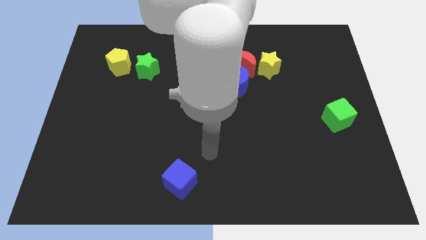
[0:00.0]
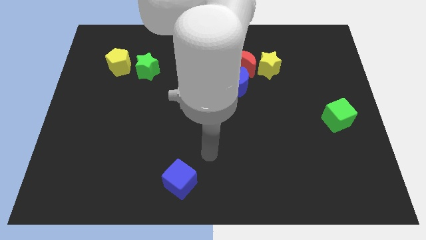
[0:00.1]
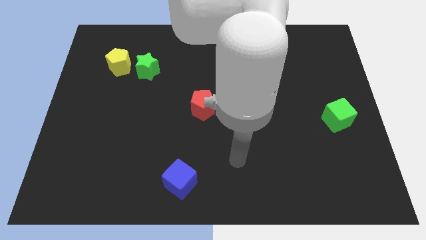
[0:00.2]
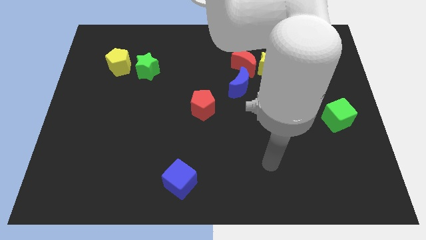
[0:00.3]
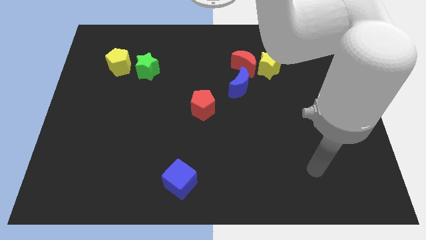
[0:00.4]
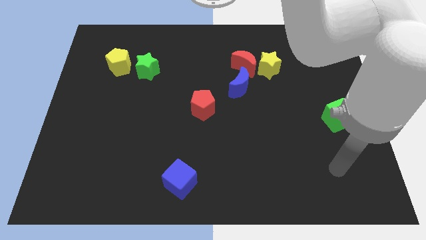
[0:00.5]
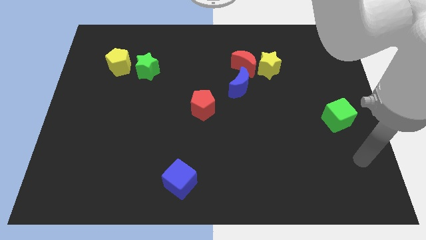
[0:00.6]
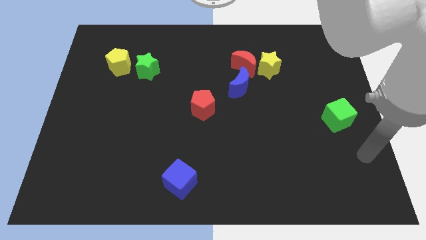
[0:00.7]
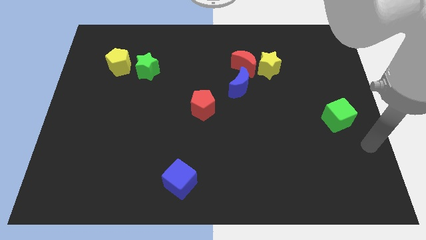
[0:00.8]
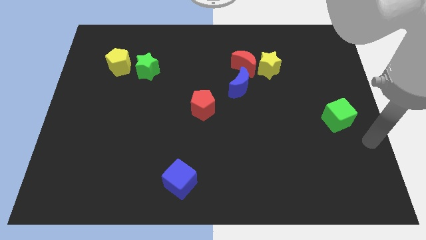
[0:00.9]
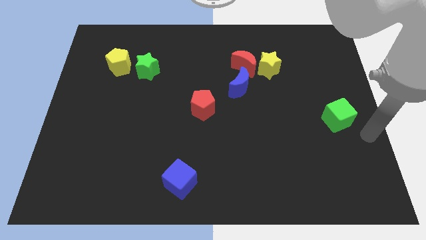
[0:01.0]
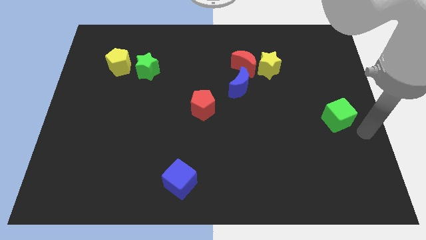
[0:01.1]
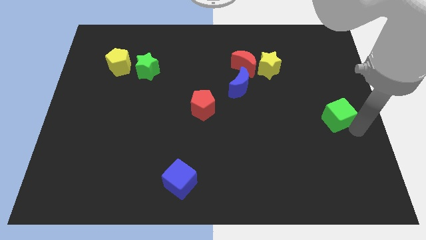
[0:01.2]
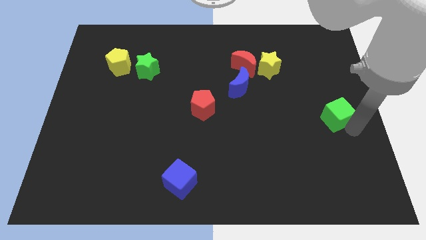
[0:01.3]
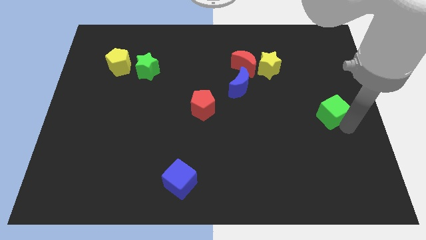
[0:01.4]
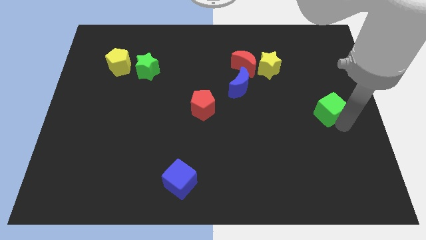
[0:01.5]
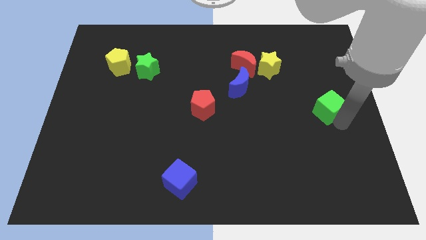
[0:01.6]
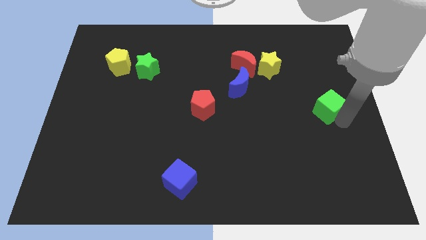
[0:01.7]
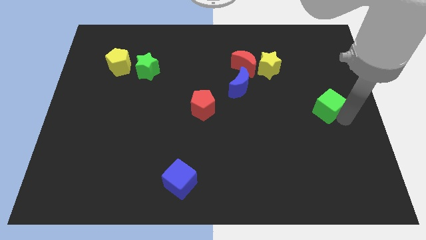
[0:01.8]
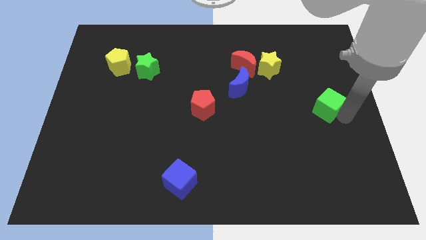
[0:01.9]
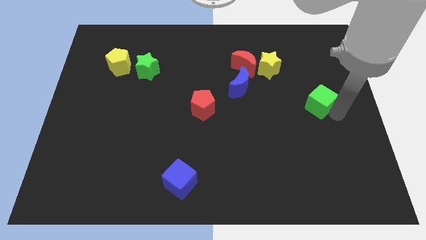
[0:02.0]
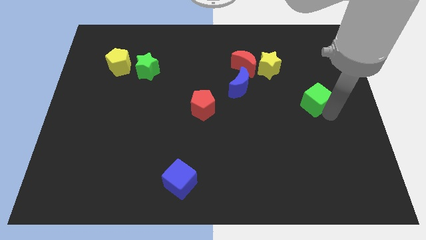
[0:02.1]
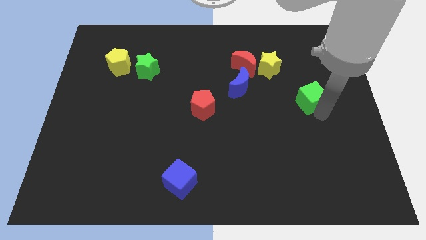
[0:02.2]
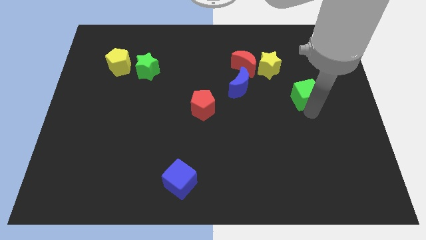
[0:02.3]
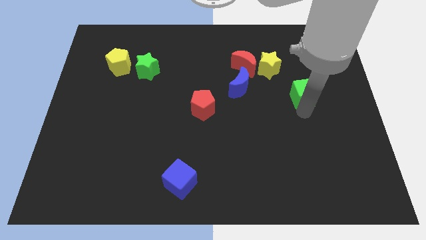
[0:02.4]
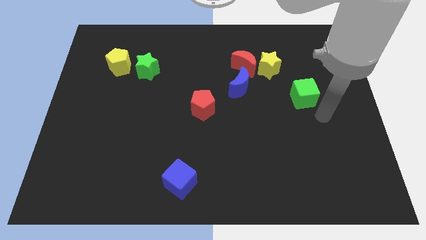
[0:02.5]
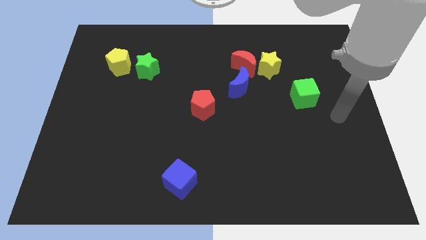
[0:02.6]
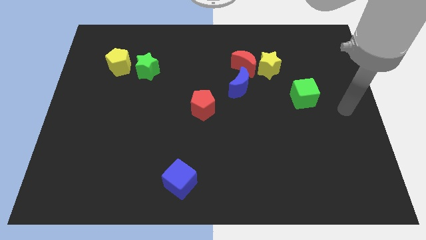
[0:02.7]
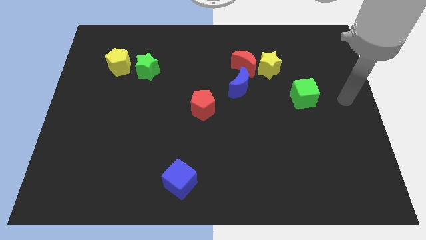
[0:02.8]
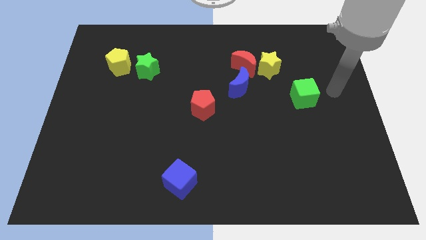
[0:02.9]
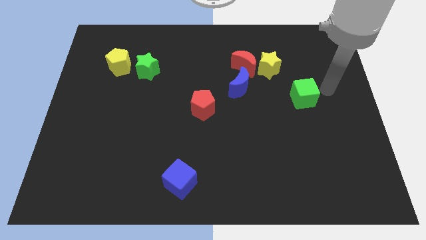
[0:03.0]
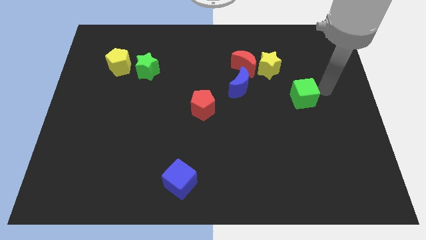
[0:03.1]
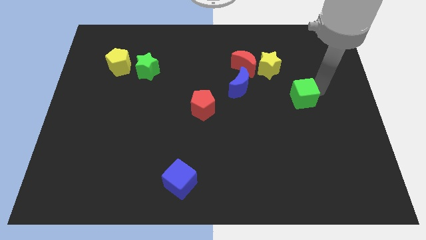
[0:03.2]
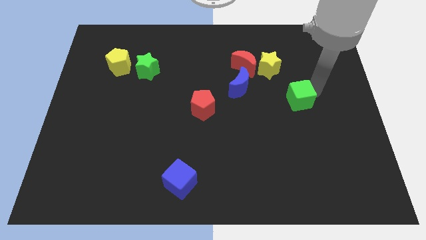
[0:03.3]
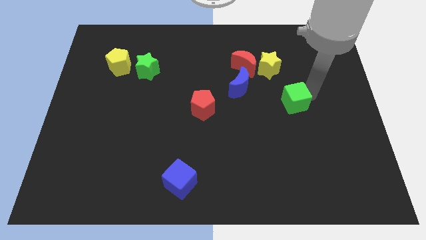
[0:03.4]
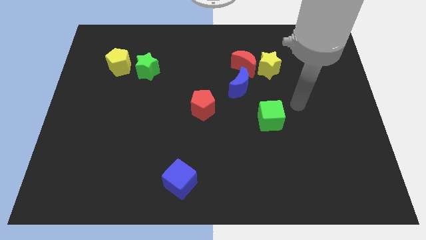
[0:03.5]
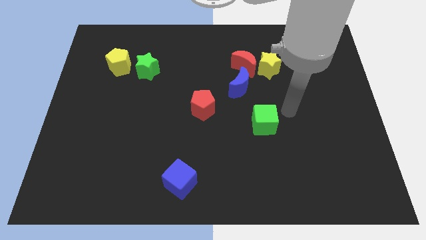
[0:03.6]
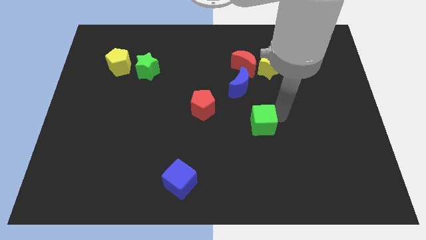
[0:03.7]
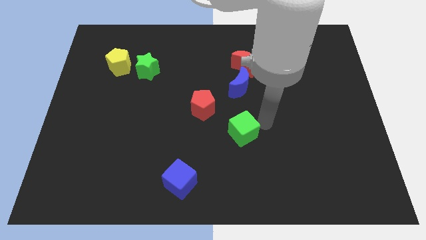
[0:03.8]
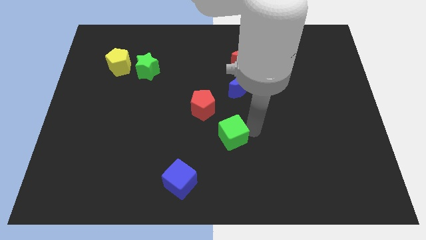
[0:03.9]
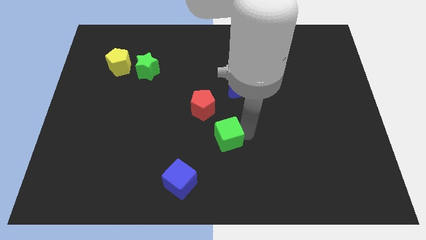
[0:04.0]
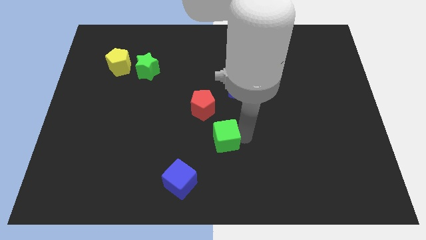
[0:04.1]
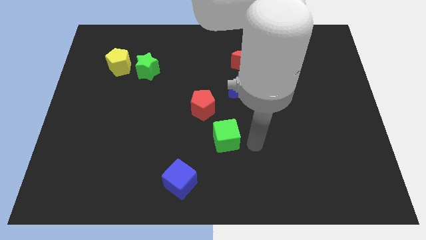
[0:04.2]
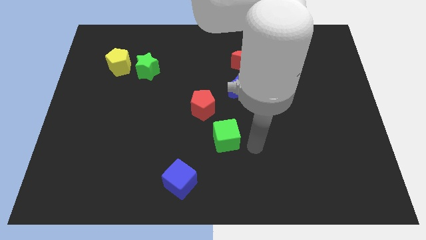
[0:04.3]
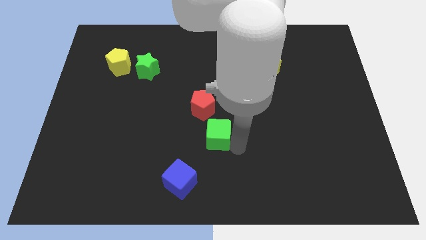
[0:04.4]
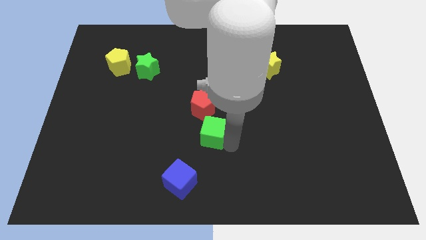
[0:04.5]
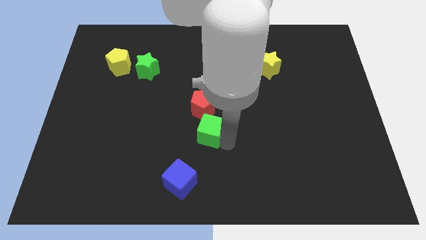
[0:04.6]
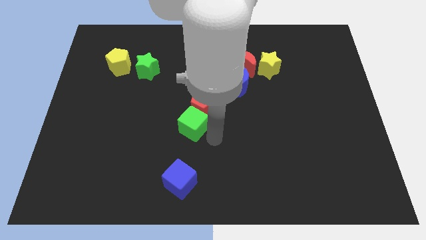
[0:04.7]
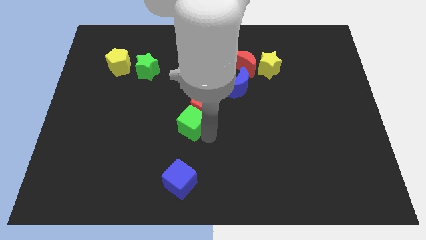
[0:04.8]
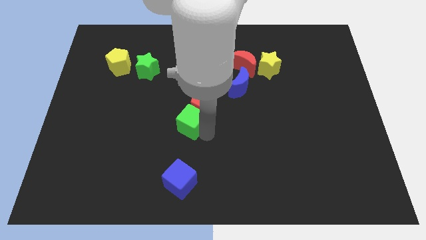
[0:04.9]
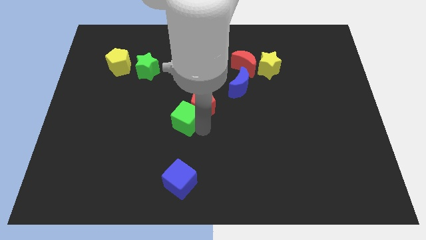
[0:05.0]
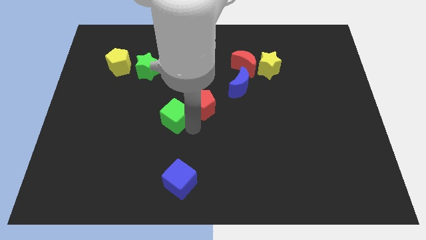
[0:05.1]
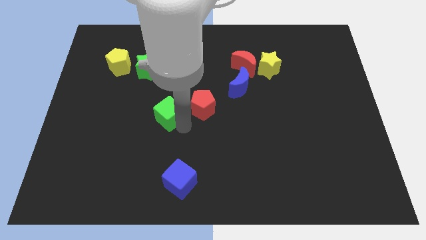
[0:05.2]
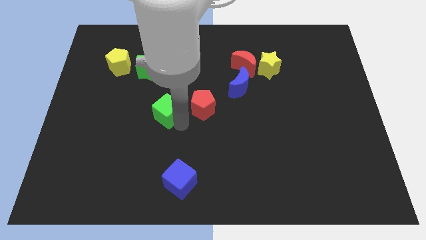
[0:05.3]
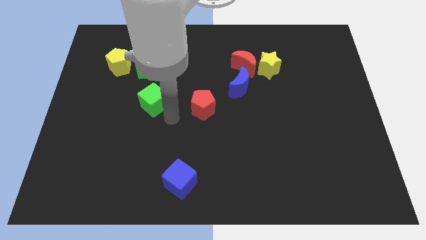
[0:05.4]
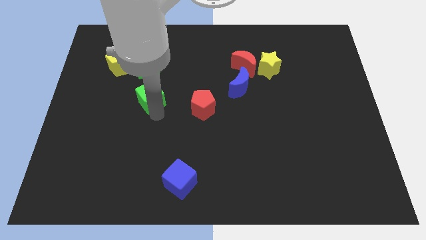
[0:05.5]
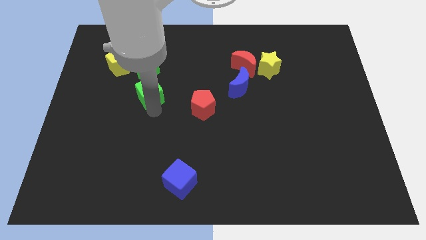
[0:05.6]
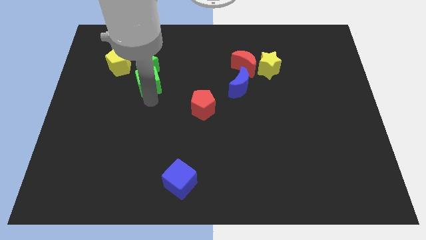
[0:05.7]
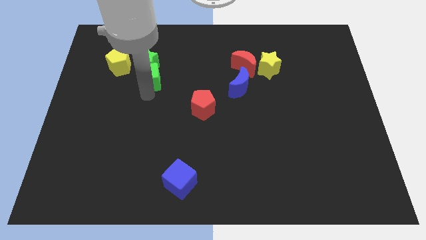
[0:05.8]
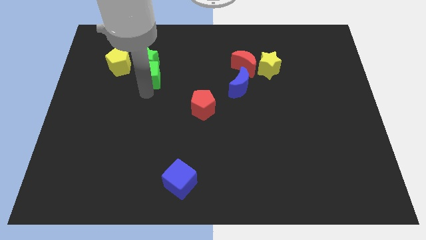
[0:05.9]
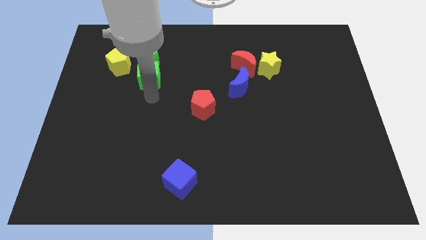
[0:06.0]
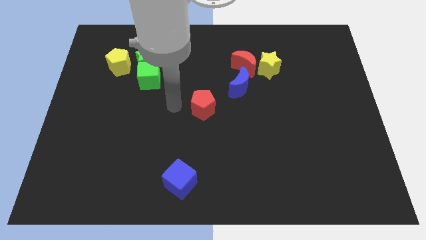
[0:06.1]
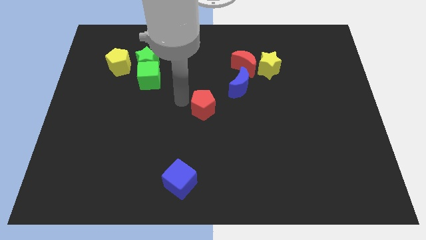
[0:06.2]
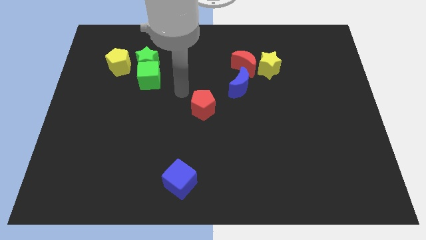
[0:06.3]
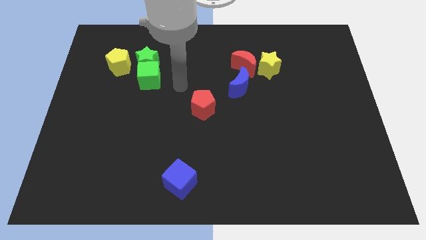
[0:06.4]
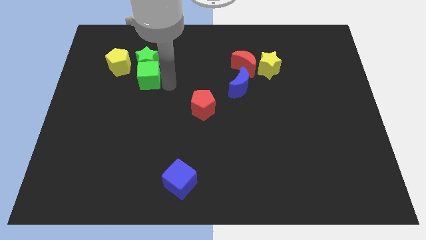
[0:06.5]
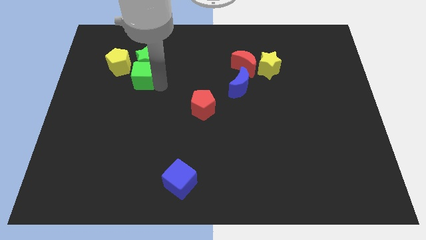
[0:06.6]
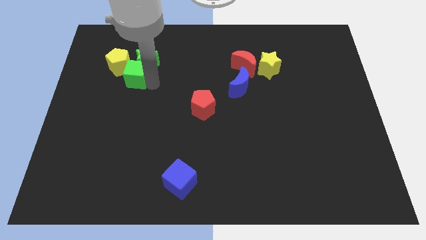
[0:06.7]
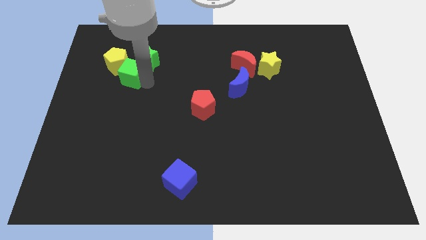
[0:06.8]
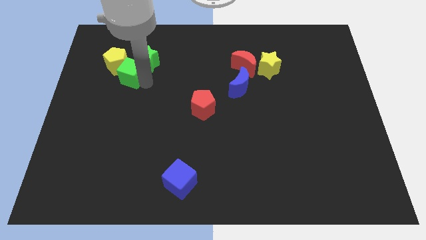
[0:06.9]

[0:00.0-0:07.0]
slide the green cube close to the yellow pentagon

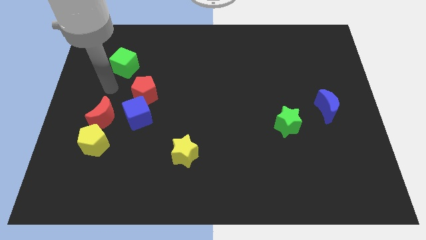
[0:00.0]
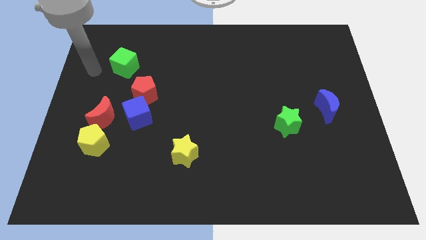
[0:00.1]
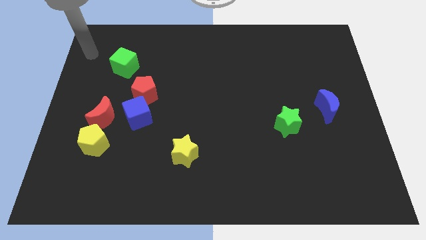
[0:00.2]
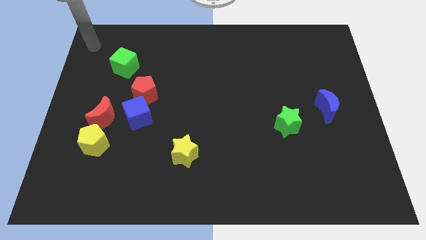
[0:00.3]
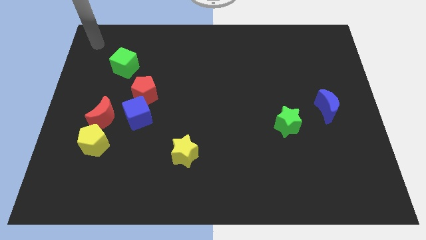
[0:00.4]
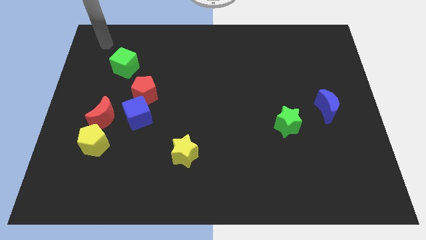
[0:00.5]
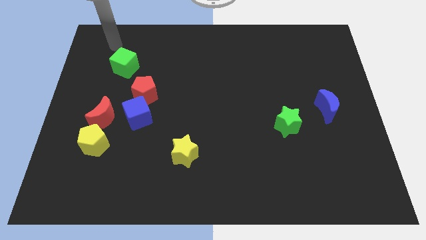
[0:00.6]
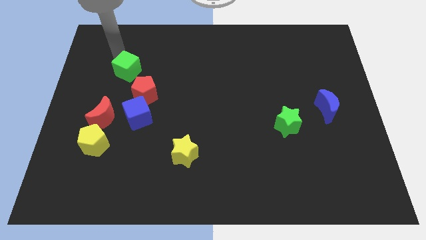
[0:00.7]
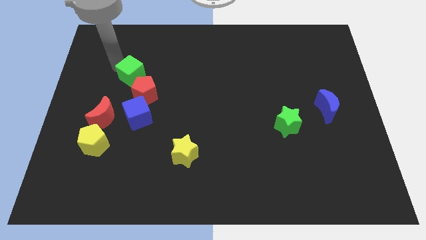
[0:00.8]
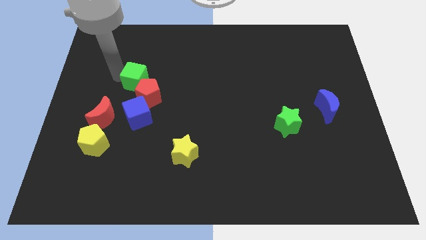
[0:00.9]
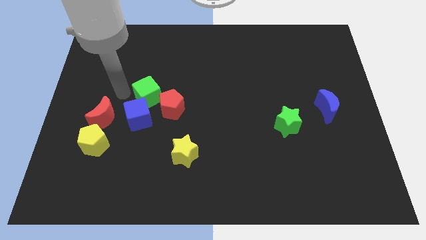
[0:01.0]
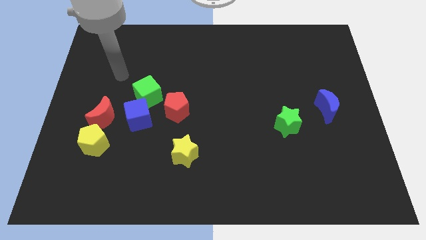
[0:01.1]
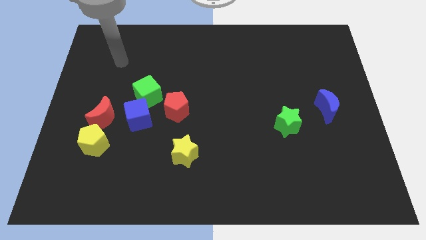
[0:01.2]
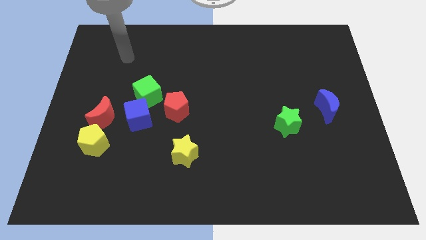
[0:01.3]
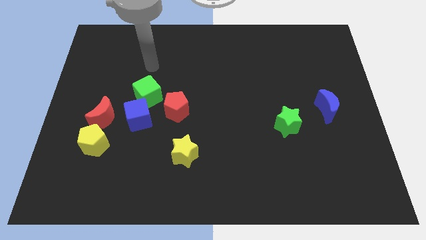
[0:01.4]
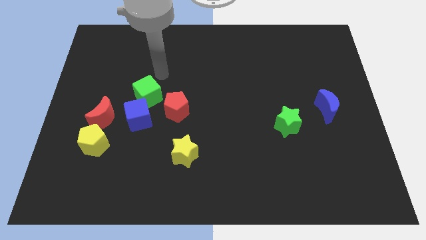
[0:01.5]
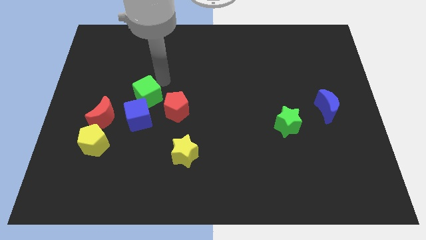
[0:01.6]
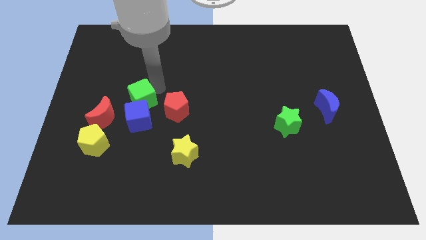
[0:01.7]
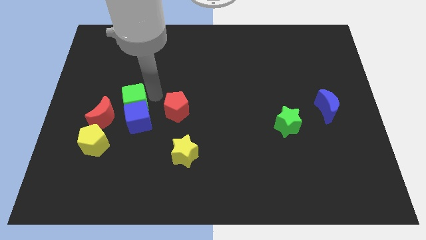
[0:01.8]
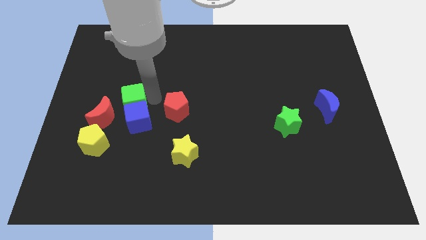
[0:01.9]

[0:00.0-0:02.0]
push the green cube to the blue cube
